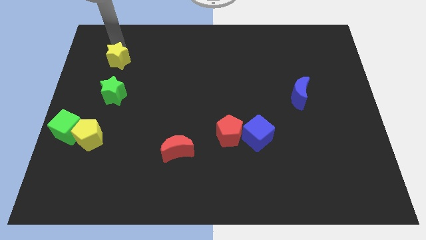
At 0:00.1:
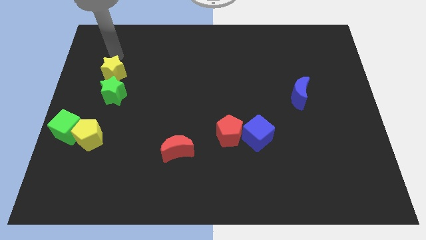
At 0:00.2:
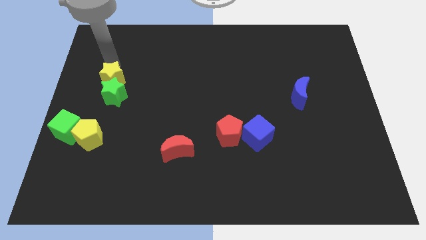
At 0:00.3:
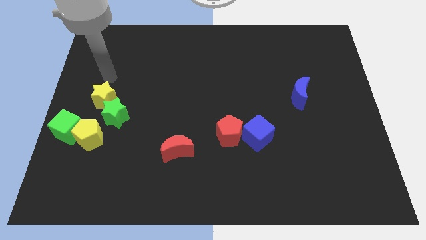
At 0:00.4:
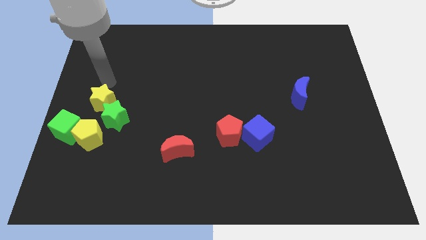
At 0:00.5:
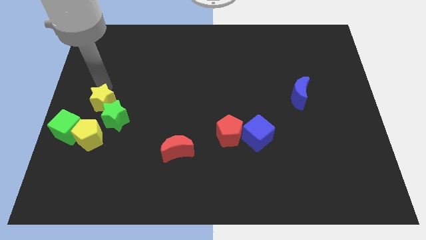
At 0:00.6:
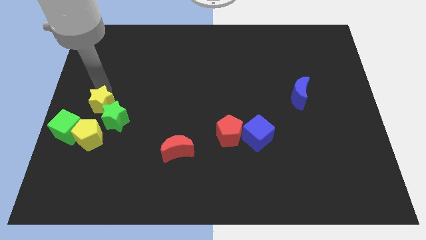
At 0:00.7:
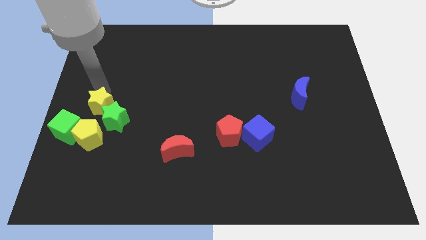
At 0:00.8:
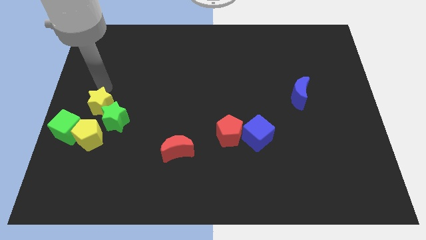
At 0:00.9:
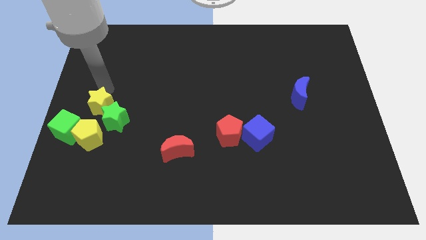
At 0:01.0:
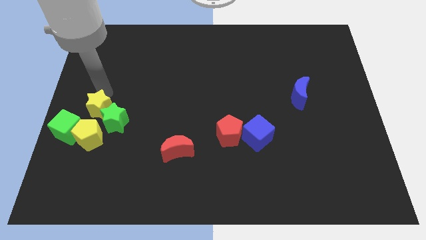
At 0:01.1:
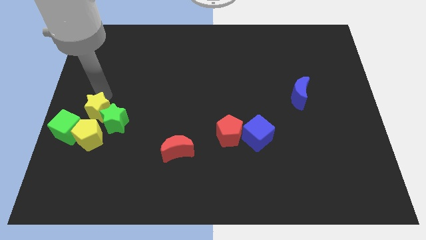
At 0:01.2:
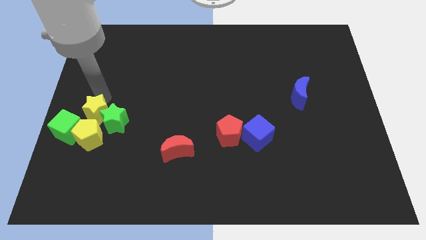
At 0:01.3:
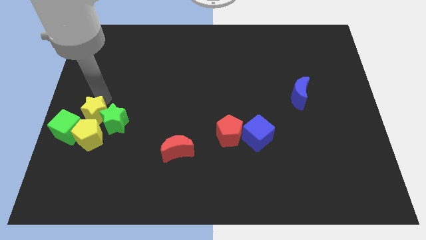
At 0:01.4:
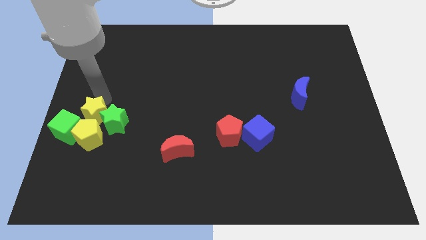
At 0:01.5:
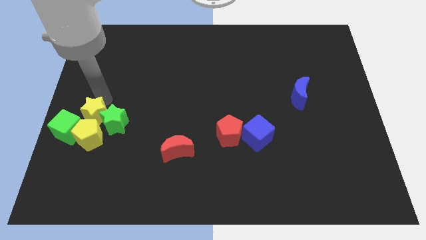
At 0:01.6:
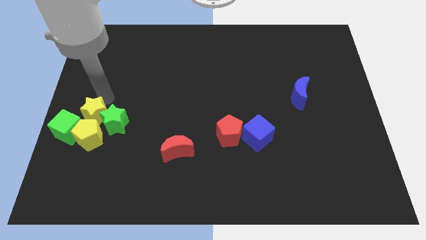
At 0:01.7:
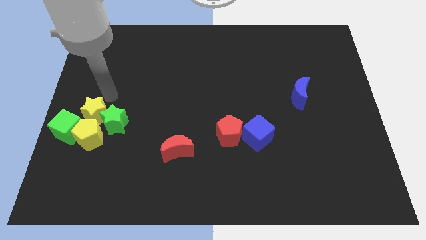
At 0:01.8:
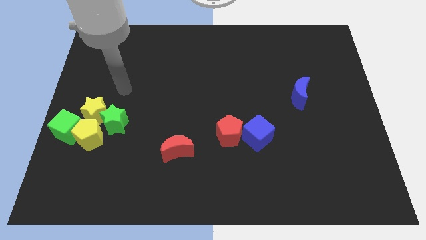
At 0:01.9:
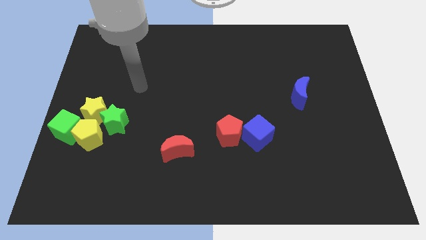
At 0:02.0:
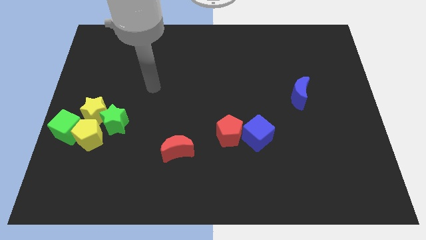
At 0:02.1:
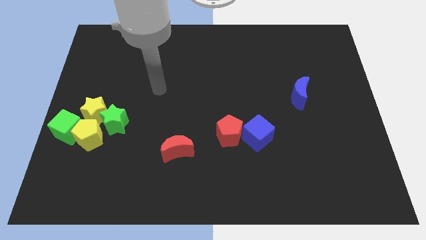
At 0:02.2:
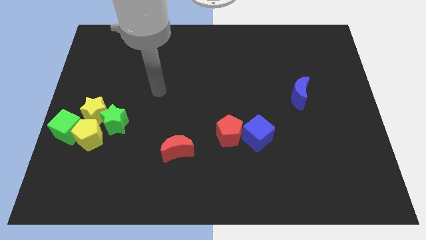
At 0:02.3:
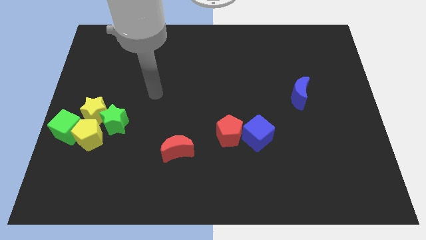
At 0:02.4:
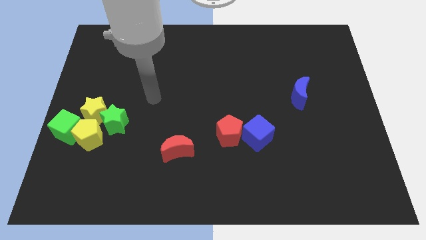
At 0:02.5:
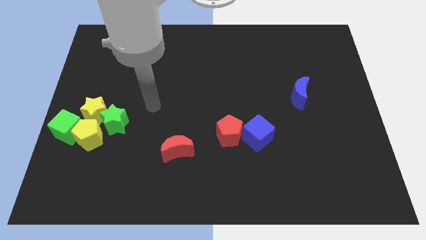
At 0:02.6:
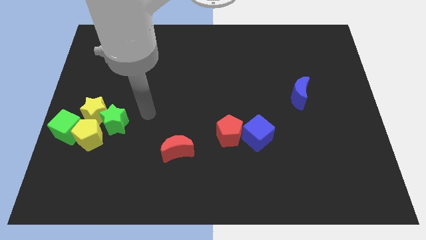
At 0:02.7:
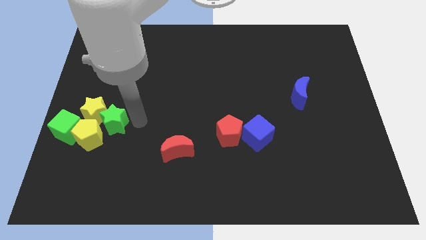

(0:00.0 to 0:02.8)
move the yellow star close to the yellow pentagon

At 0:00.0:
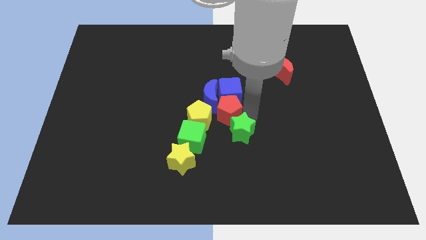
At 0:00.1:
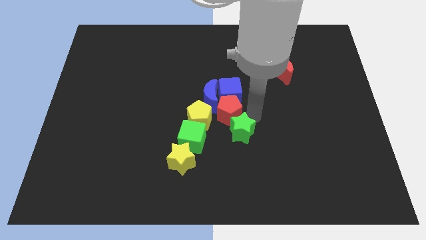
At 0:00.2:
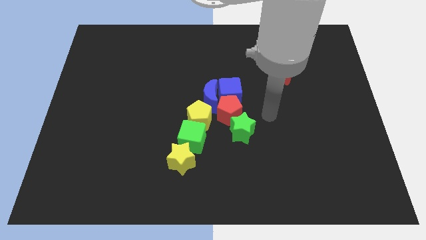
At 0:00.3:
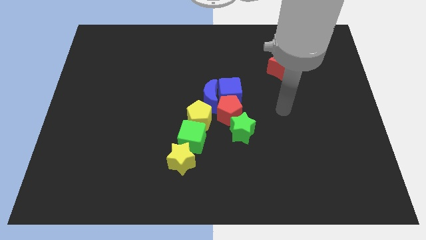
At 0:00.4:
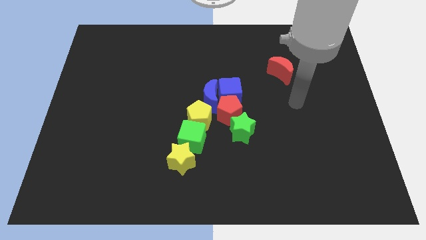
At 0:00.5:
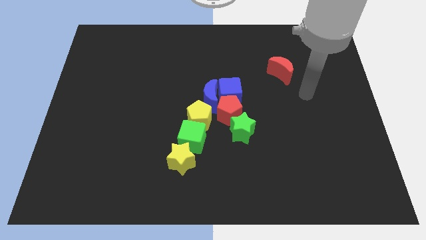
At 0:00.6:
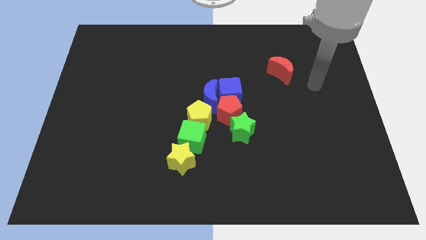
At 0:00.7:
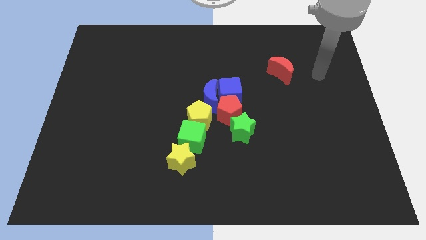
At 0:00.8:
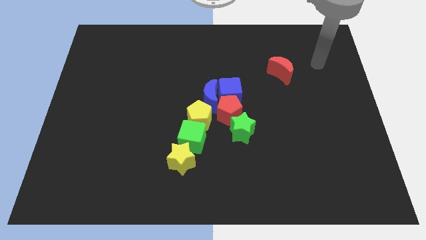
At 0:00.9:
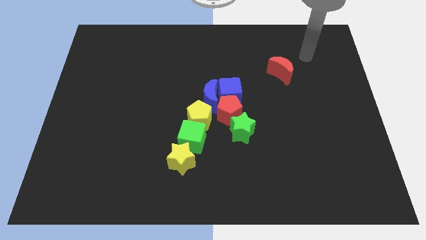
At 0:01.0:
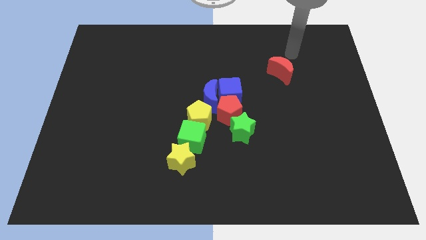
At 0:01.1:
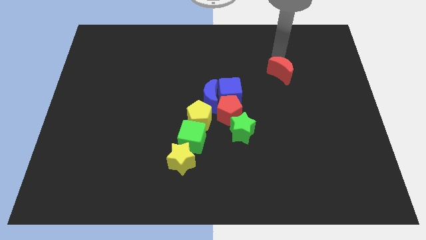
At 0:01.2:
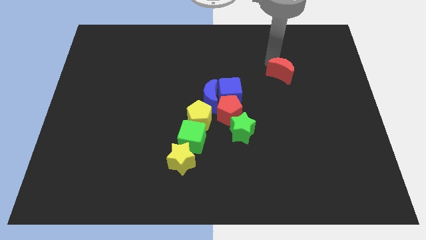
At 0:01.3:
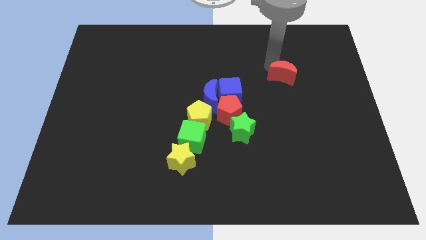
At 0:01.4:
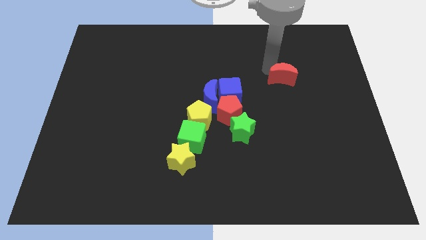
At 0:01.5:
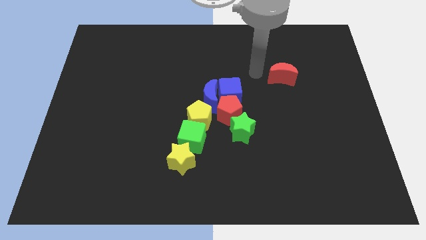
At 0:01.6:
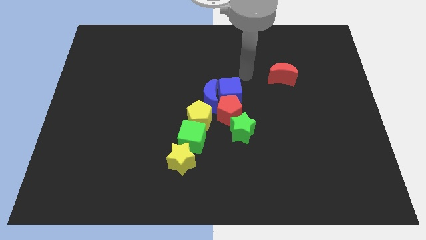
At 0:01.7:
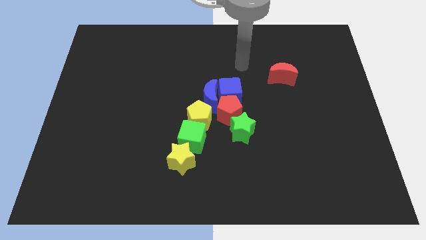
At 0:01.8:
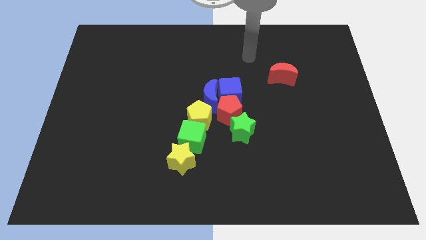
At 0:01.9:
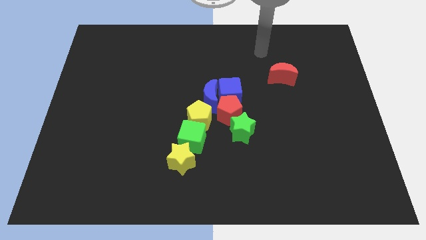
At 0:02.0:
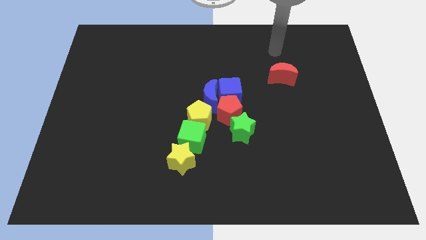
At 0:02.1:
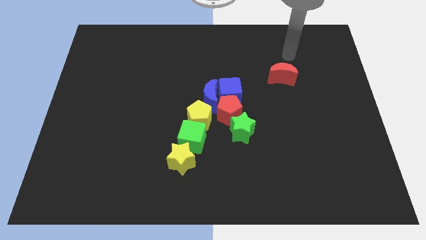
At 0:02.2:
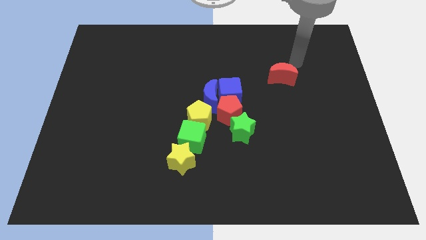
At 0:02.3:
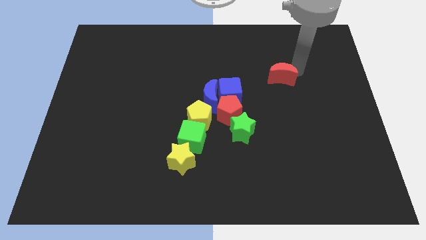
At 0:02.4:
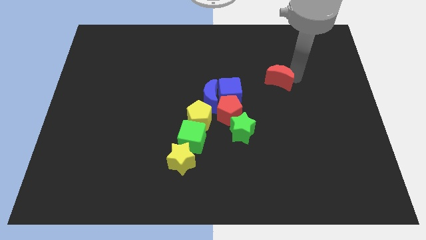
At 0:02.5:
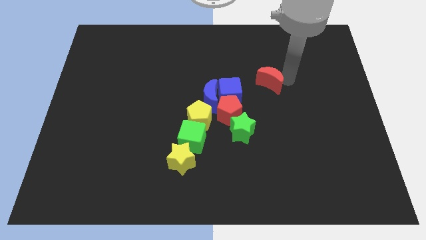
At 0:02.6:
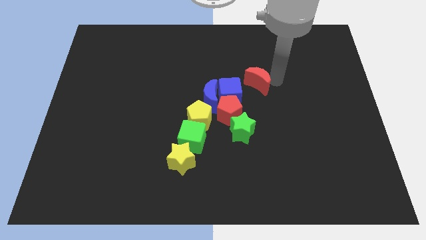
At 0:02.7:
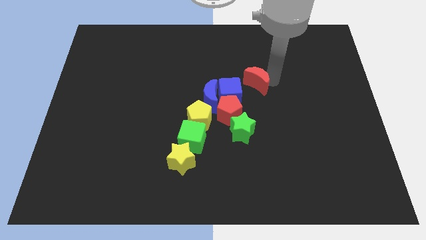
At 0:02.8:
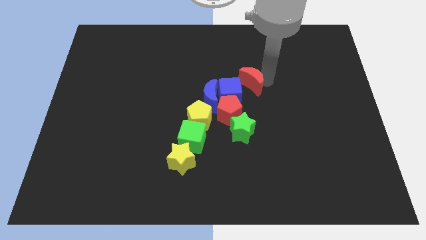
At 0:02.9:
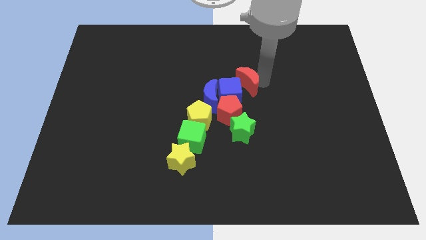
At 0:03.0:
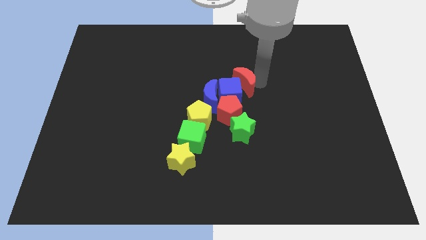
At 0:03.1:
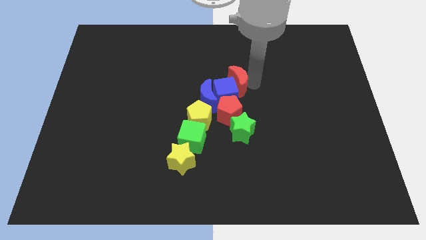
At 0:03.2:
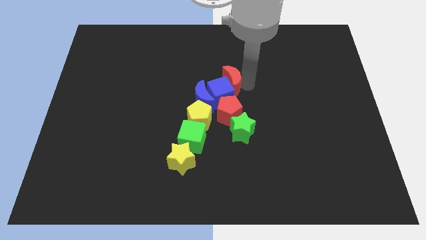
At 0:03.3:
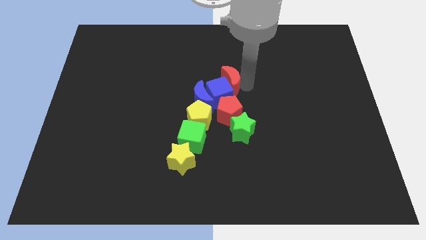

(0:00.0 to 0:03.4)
move the red crescent into the blue cube

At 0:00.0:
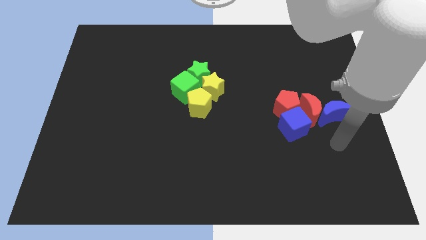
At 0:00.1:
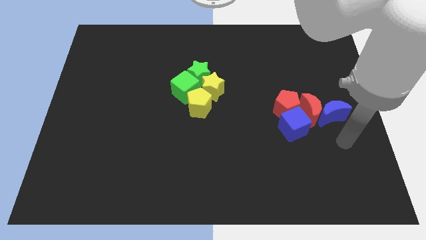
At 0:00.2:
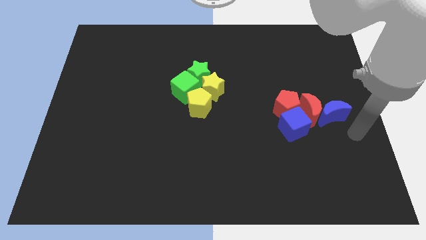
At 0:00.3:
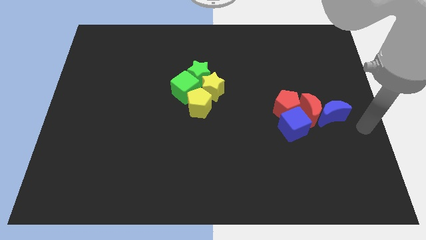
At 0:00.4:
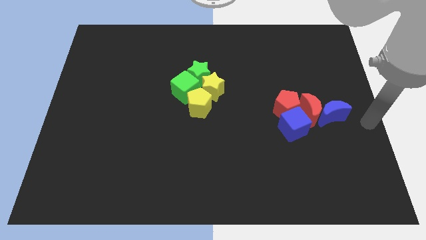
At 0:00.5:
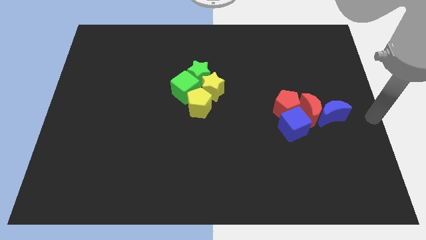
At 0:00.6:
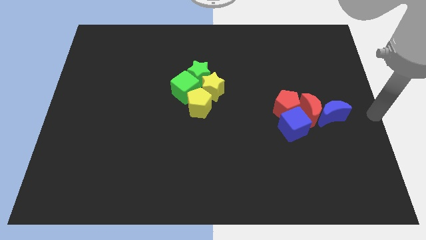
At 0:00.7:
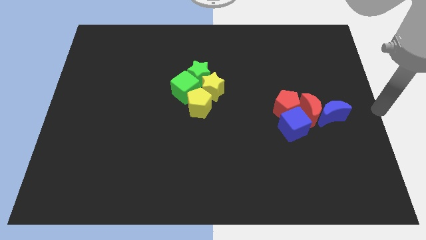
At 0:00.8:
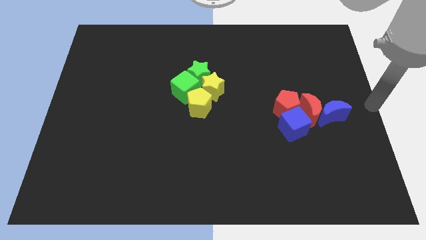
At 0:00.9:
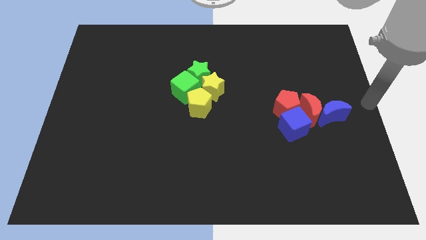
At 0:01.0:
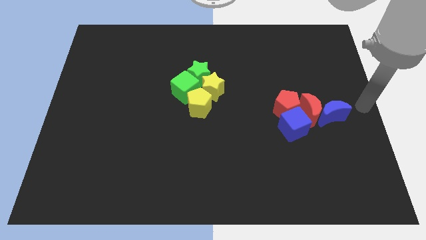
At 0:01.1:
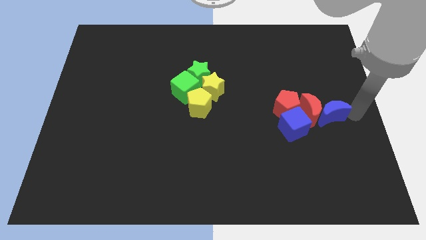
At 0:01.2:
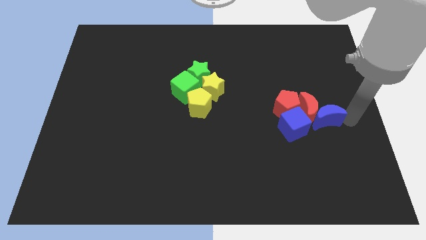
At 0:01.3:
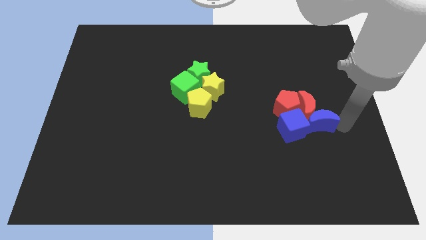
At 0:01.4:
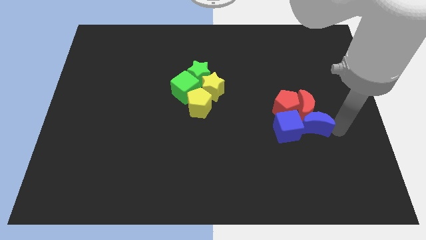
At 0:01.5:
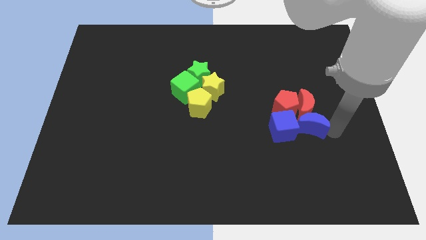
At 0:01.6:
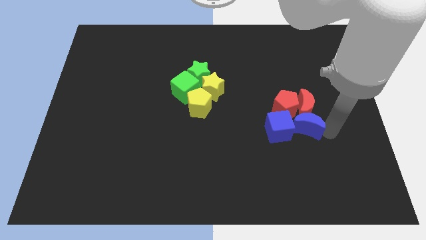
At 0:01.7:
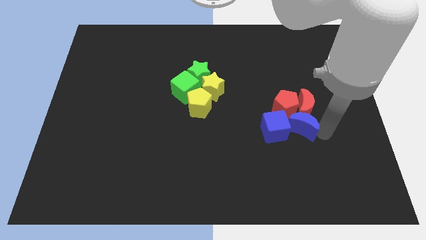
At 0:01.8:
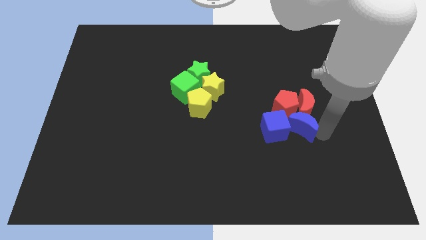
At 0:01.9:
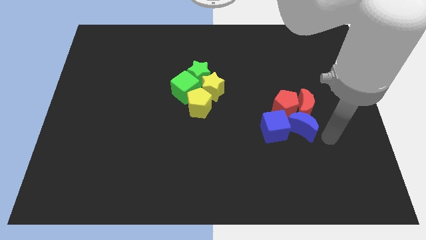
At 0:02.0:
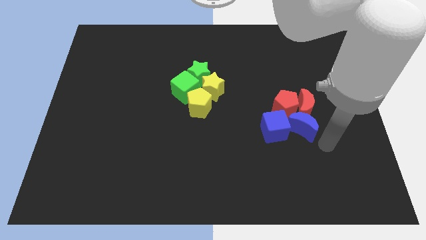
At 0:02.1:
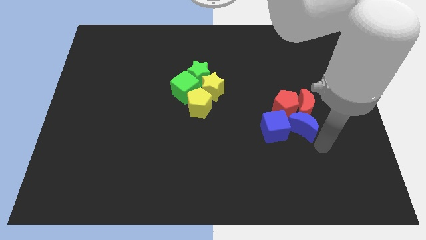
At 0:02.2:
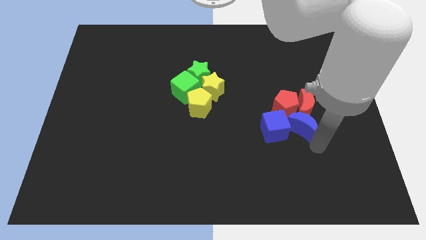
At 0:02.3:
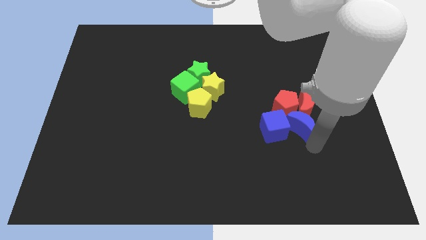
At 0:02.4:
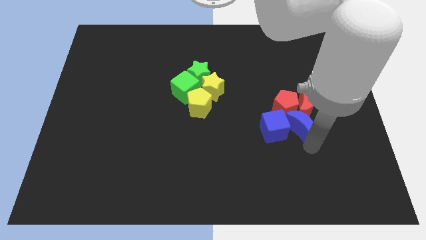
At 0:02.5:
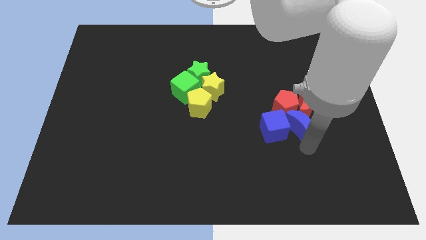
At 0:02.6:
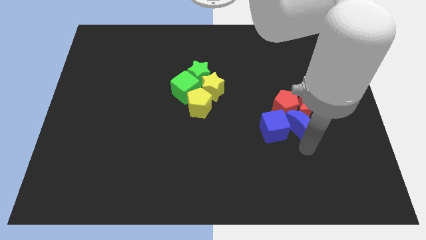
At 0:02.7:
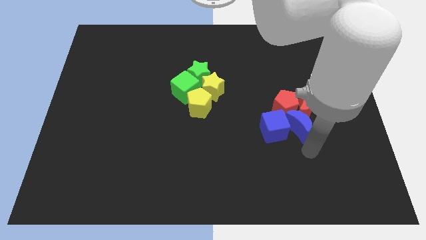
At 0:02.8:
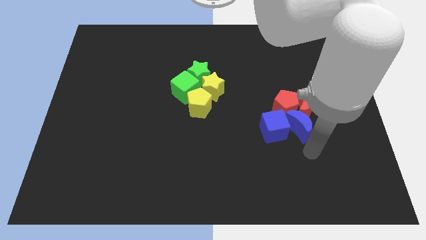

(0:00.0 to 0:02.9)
push the blue moon into the blue cube to the right side
